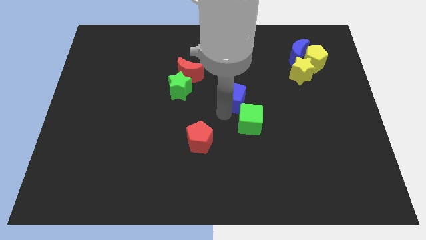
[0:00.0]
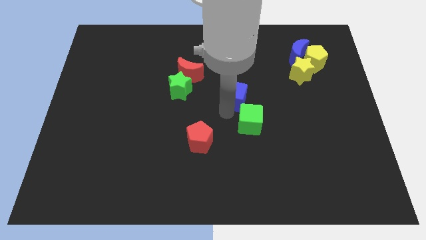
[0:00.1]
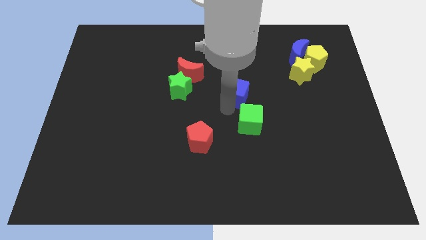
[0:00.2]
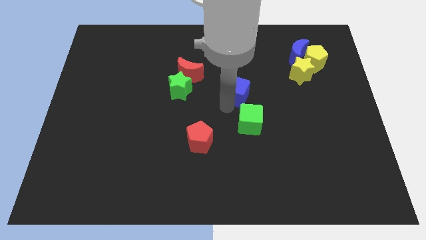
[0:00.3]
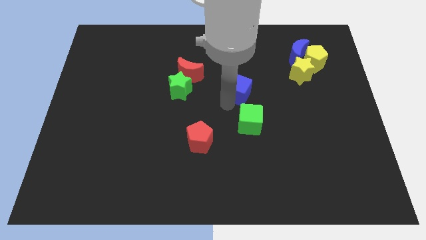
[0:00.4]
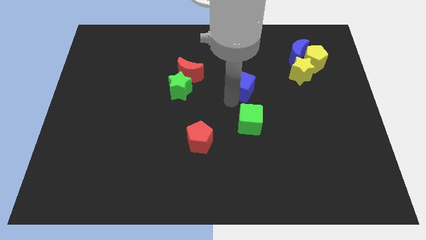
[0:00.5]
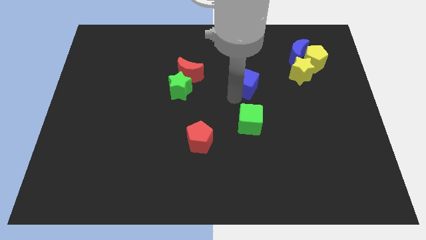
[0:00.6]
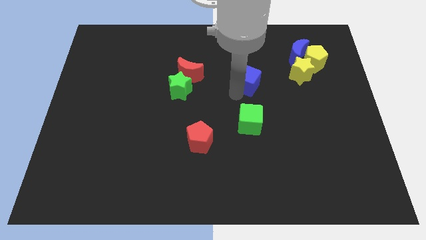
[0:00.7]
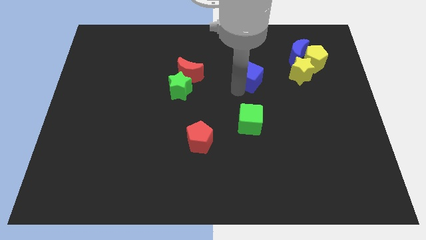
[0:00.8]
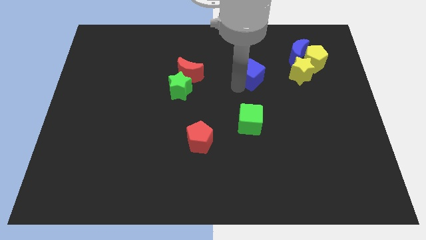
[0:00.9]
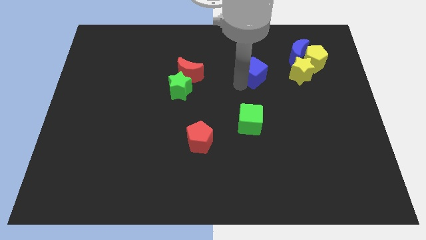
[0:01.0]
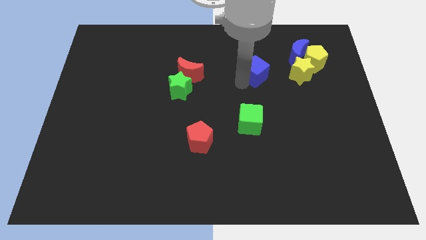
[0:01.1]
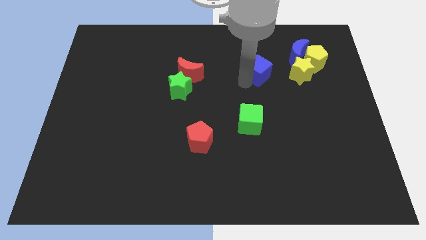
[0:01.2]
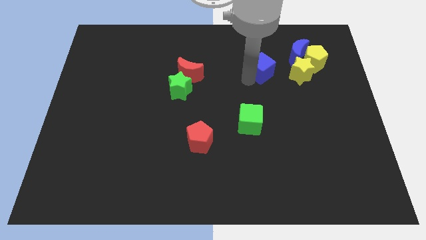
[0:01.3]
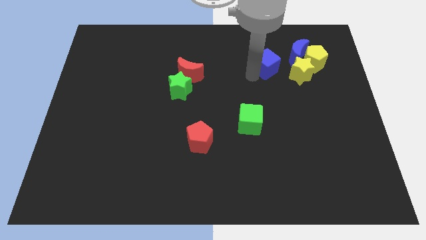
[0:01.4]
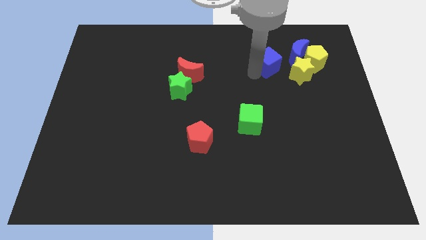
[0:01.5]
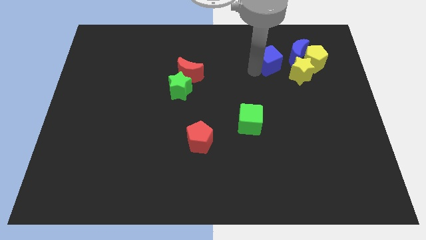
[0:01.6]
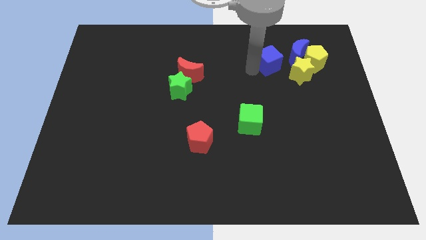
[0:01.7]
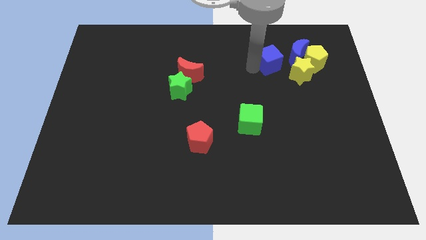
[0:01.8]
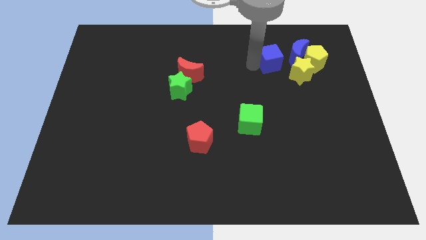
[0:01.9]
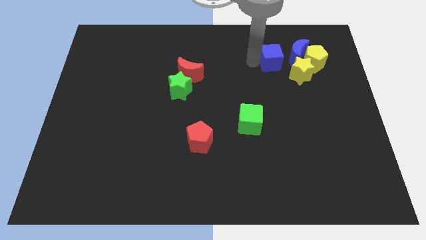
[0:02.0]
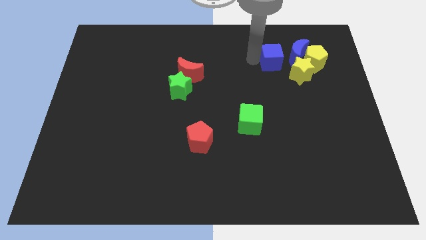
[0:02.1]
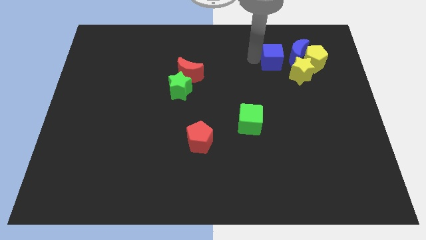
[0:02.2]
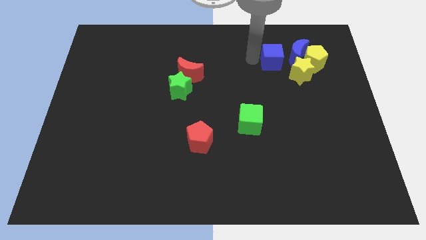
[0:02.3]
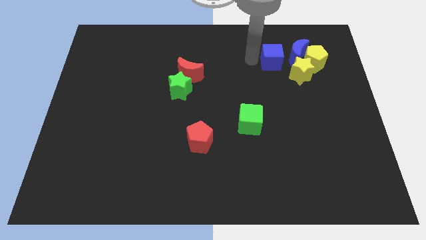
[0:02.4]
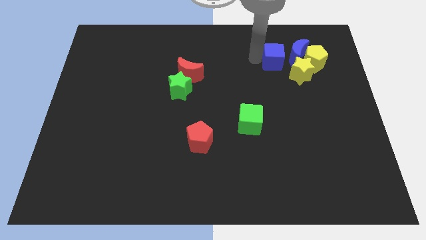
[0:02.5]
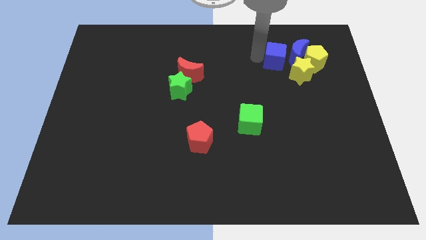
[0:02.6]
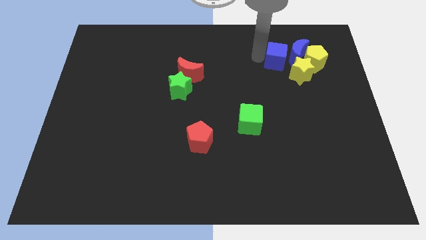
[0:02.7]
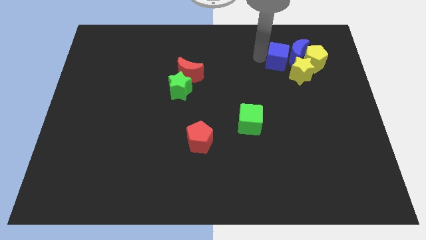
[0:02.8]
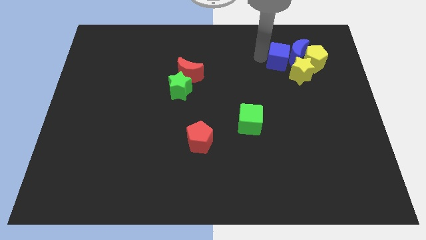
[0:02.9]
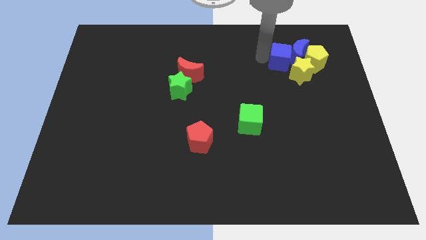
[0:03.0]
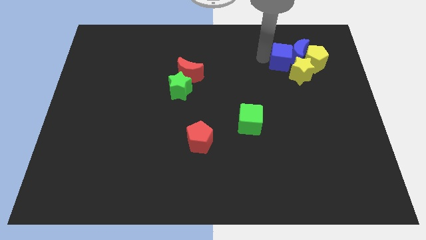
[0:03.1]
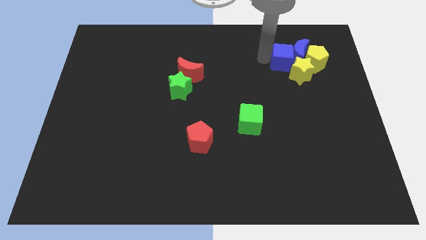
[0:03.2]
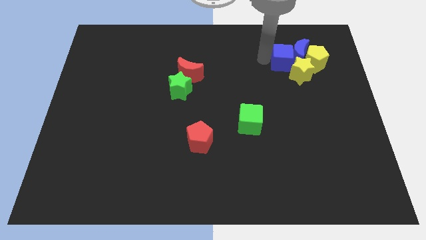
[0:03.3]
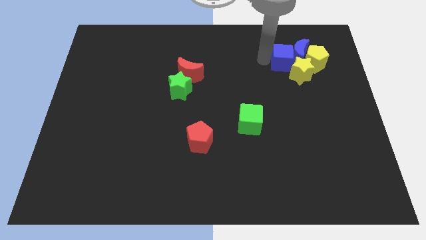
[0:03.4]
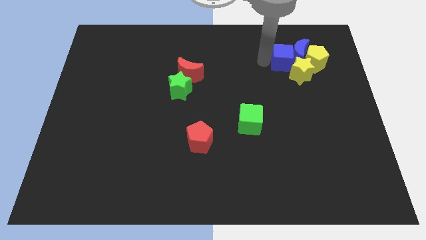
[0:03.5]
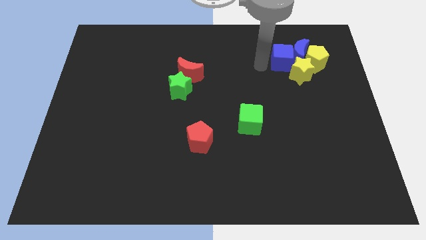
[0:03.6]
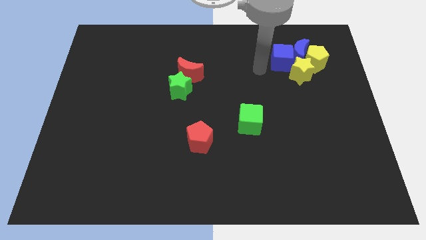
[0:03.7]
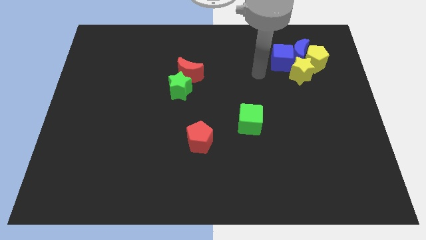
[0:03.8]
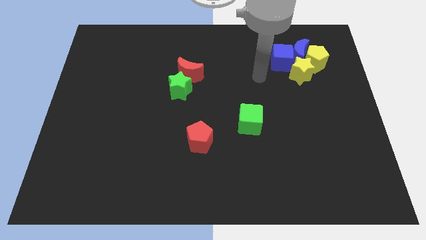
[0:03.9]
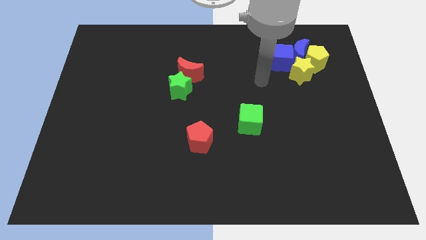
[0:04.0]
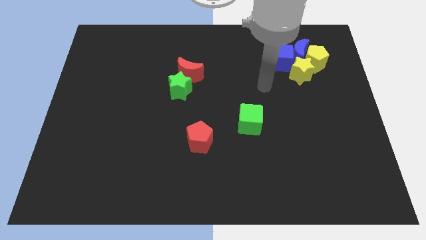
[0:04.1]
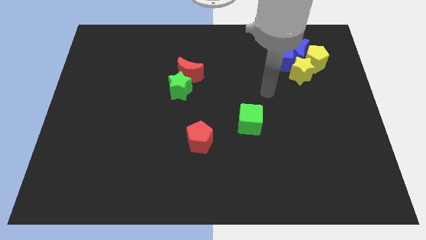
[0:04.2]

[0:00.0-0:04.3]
place blue cube left to the blue crescent

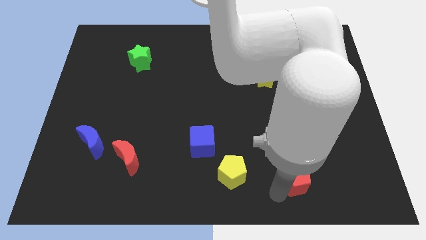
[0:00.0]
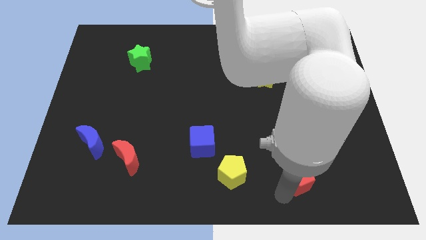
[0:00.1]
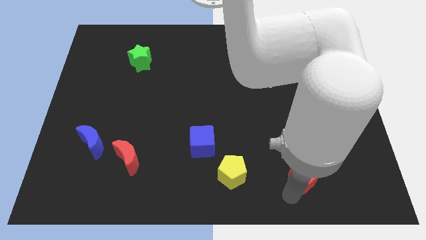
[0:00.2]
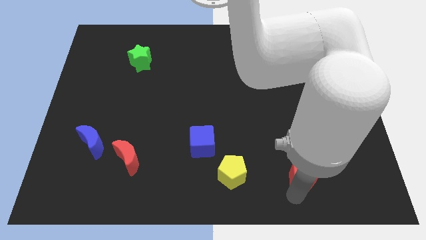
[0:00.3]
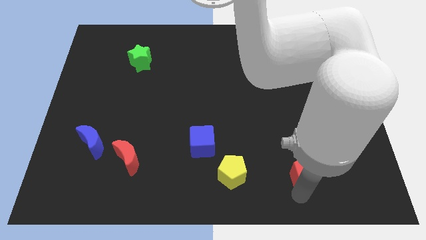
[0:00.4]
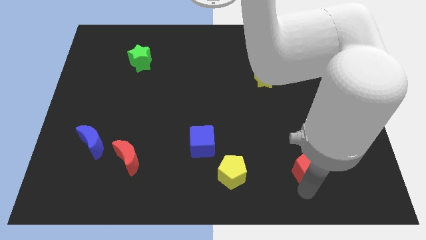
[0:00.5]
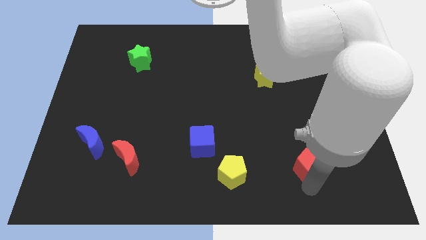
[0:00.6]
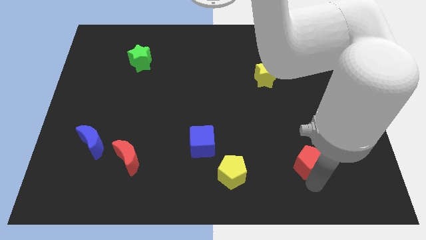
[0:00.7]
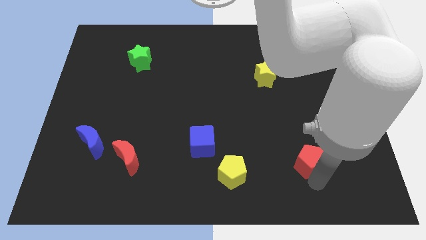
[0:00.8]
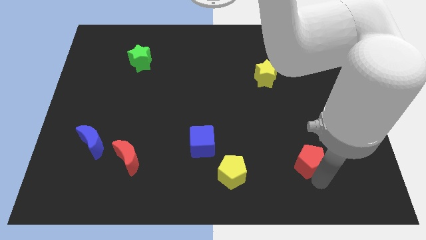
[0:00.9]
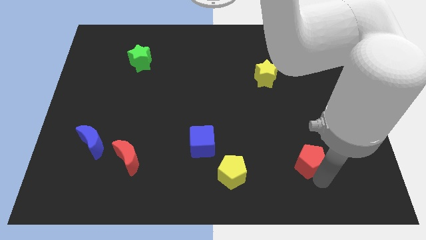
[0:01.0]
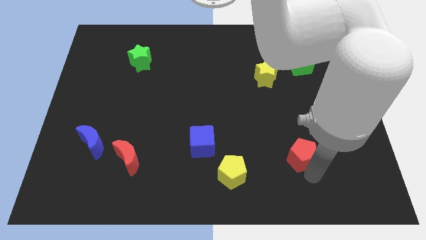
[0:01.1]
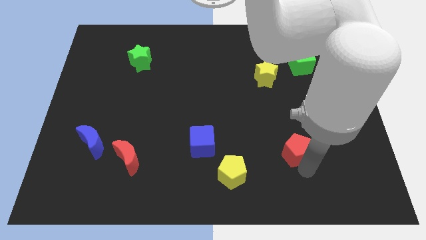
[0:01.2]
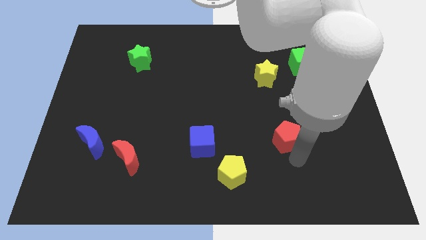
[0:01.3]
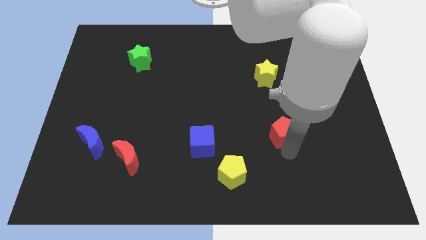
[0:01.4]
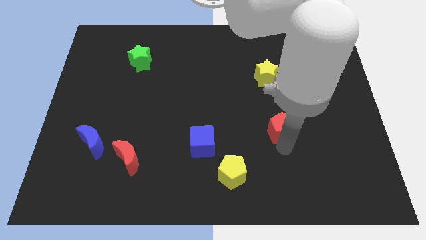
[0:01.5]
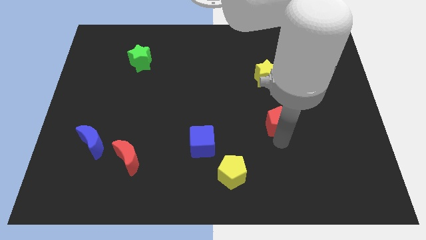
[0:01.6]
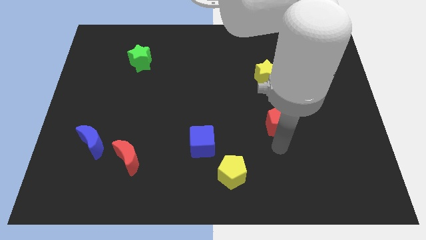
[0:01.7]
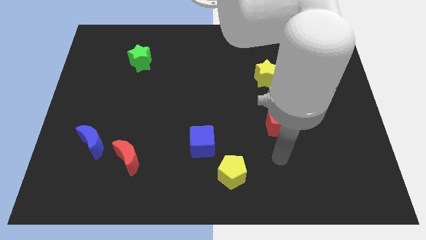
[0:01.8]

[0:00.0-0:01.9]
push red pentagon towards yellow star

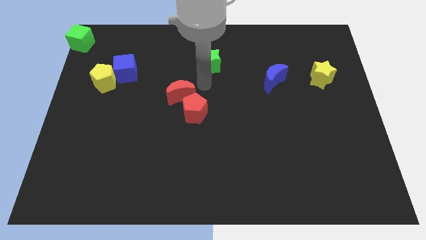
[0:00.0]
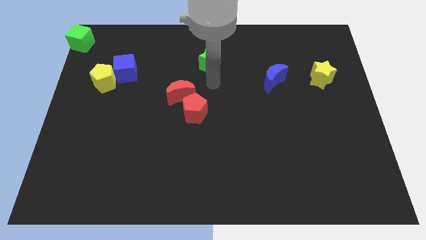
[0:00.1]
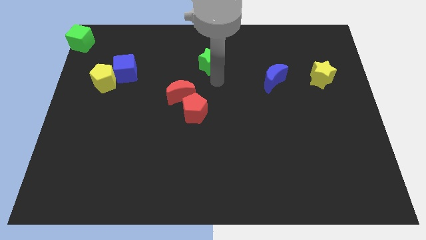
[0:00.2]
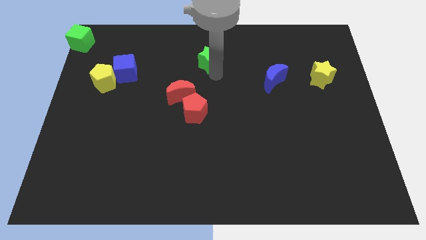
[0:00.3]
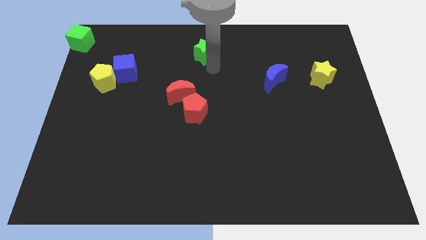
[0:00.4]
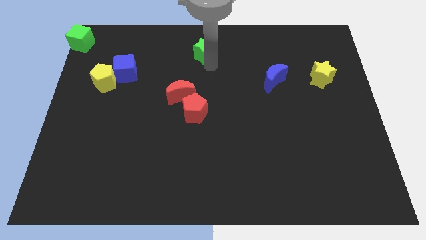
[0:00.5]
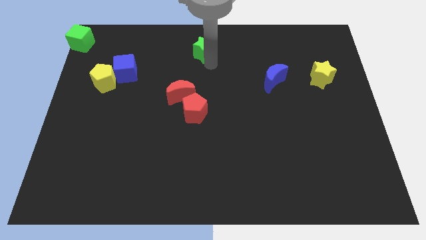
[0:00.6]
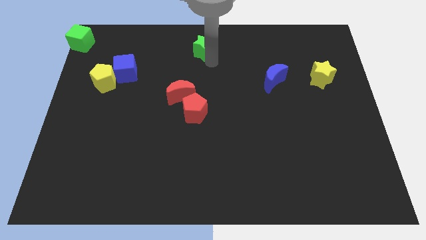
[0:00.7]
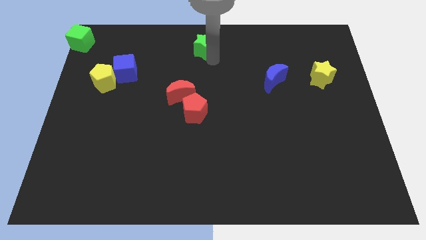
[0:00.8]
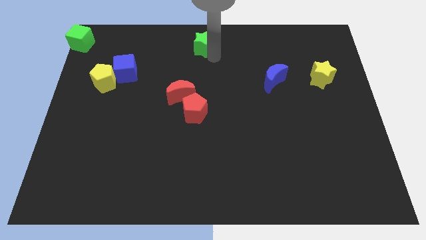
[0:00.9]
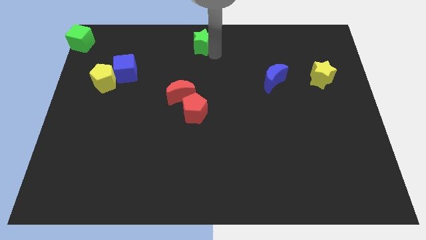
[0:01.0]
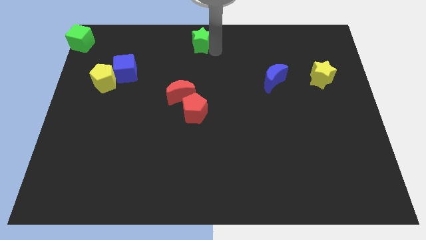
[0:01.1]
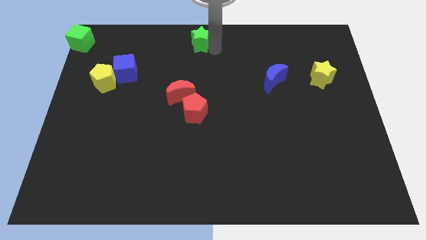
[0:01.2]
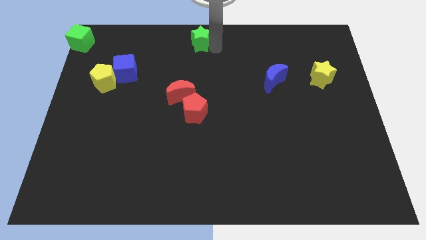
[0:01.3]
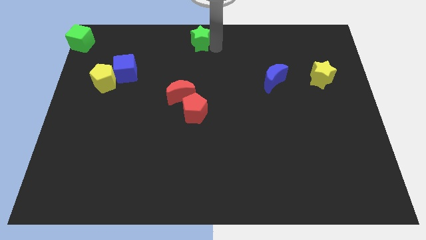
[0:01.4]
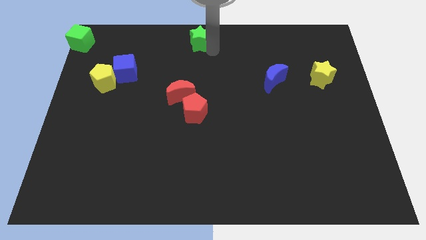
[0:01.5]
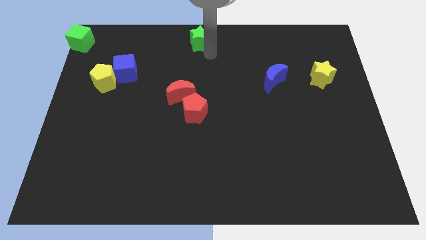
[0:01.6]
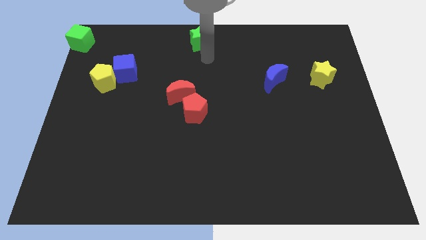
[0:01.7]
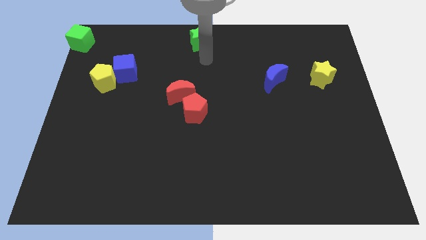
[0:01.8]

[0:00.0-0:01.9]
move the green star to the top center of the board

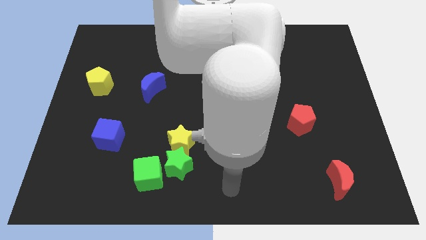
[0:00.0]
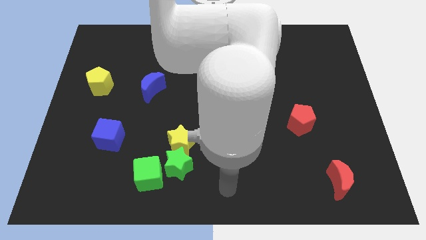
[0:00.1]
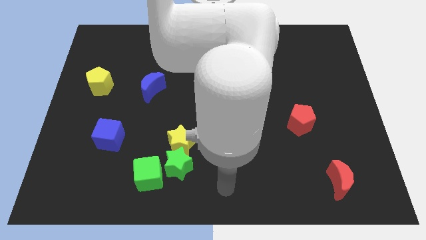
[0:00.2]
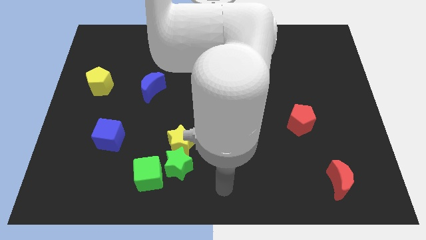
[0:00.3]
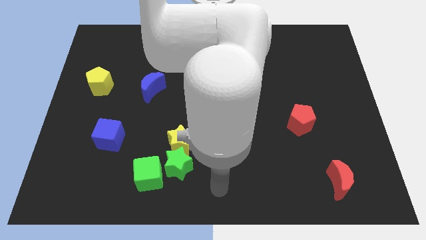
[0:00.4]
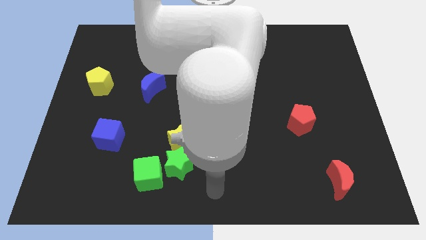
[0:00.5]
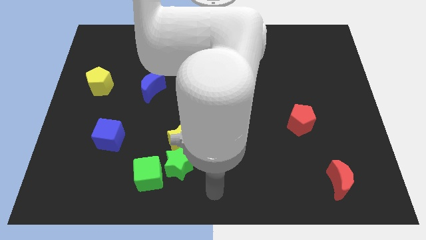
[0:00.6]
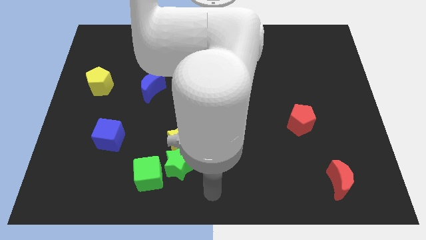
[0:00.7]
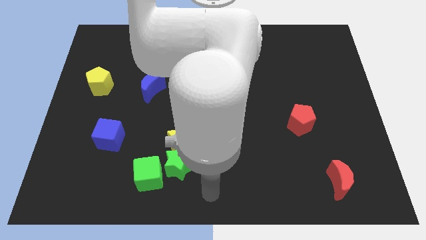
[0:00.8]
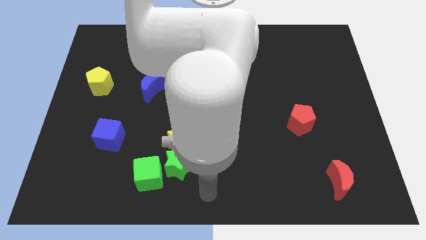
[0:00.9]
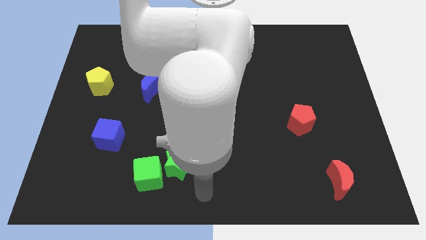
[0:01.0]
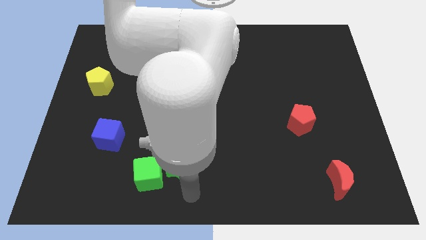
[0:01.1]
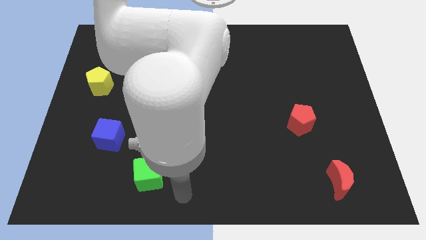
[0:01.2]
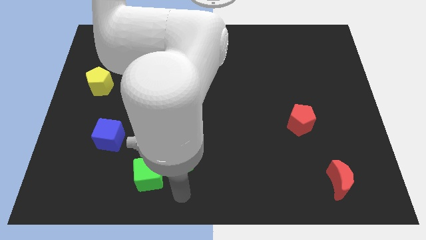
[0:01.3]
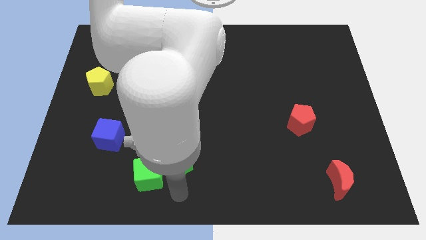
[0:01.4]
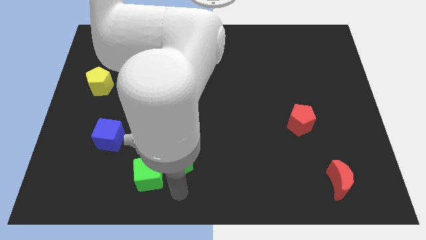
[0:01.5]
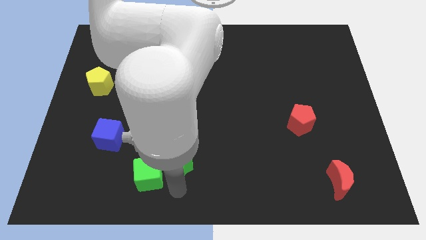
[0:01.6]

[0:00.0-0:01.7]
move the arm towards the green star
